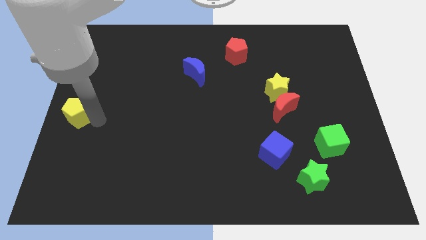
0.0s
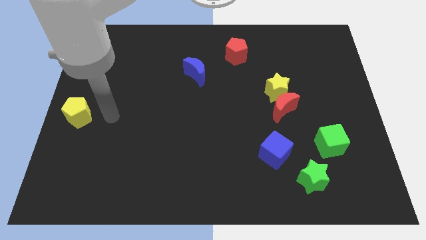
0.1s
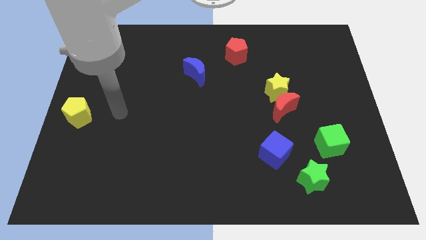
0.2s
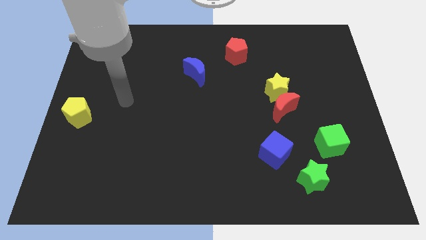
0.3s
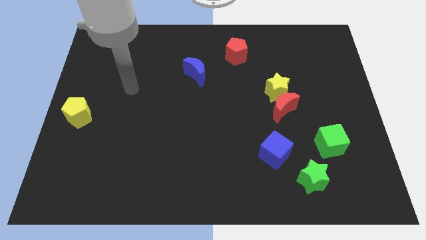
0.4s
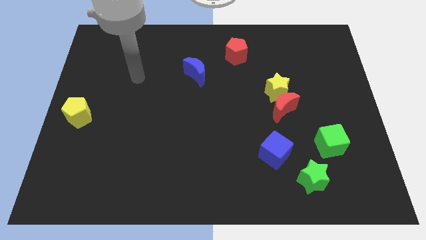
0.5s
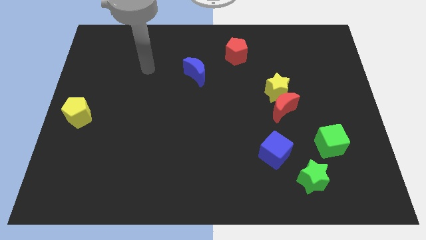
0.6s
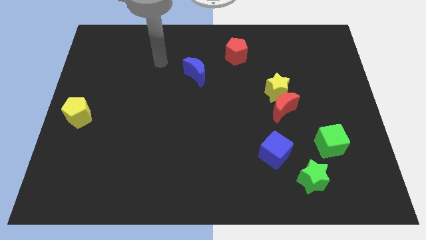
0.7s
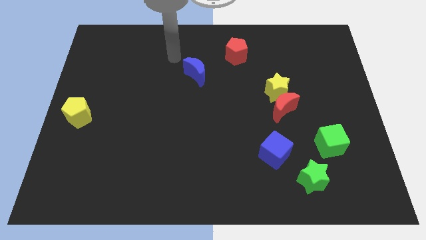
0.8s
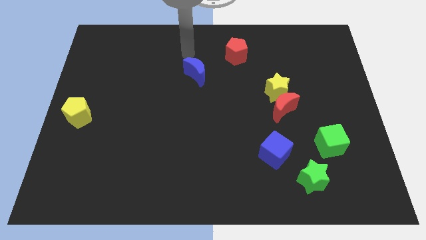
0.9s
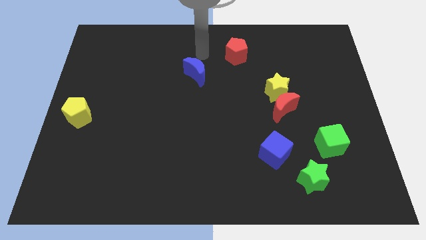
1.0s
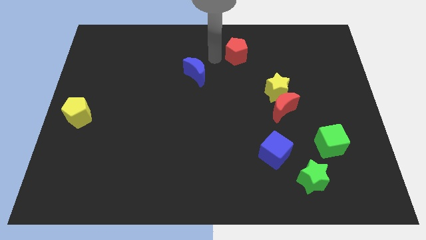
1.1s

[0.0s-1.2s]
move your arm towards the top center of the board

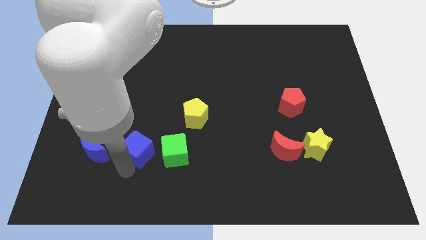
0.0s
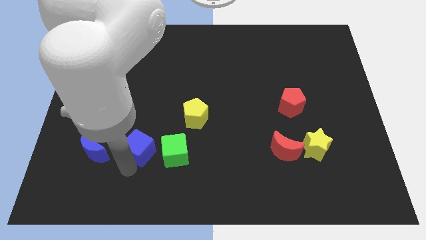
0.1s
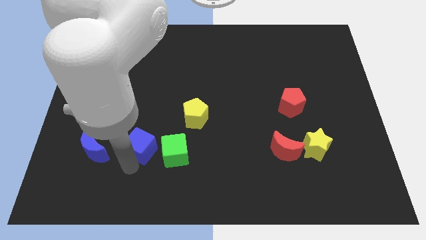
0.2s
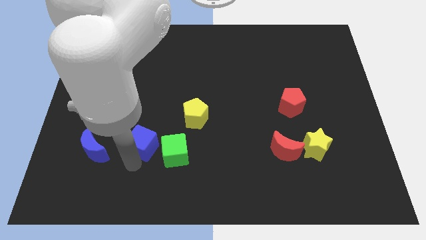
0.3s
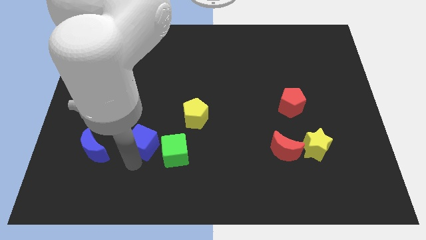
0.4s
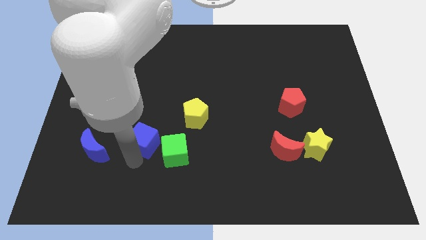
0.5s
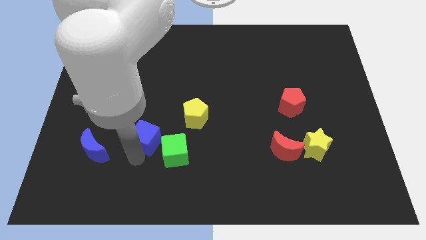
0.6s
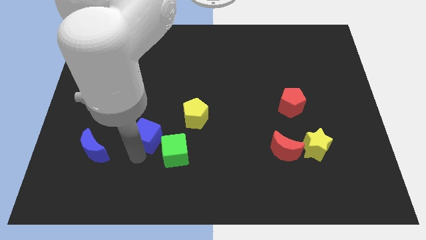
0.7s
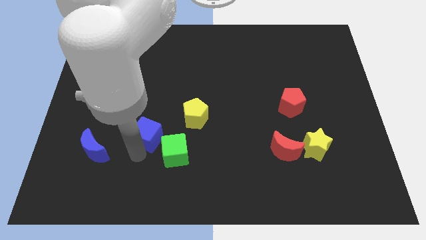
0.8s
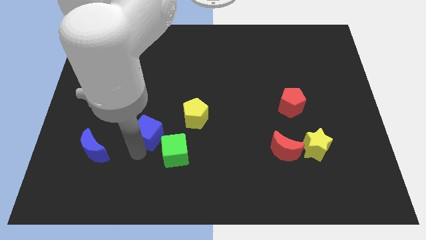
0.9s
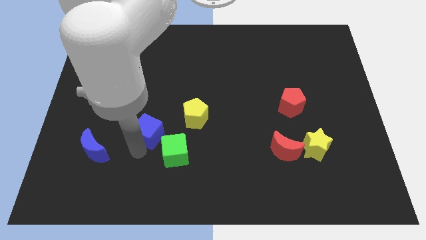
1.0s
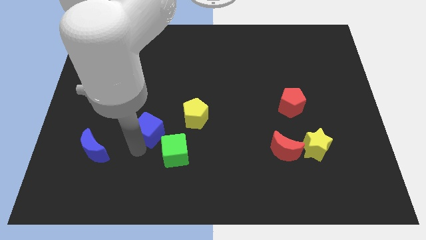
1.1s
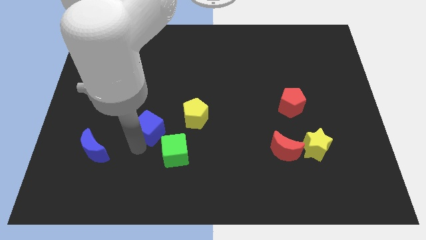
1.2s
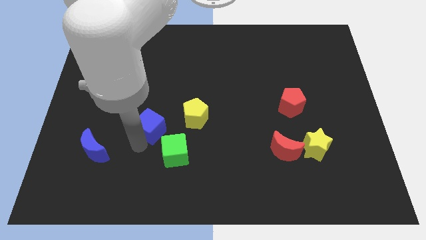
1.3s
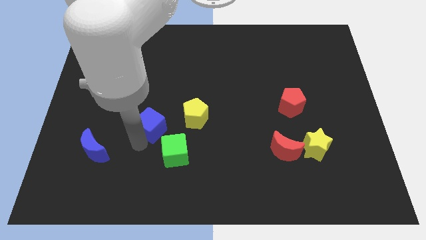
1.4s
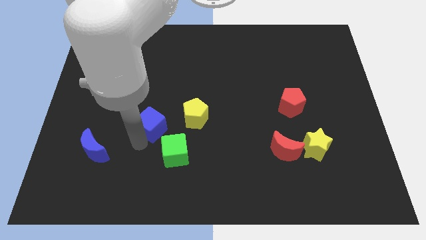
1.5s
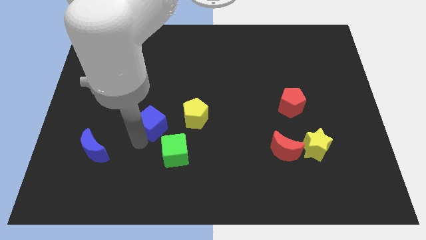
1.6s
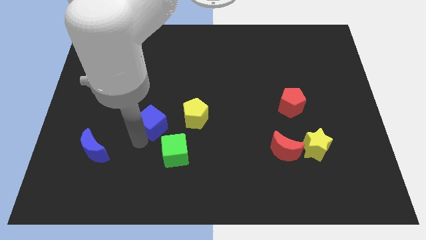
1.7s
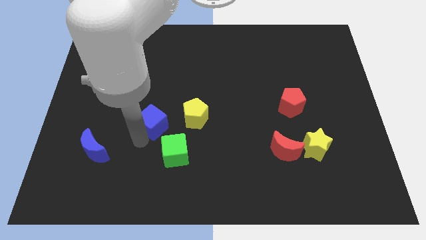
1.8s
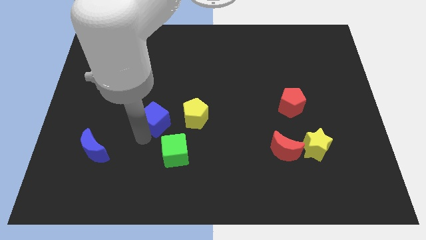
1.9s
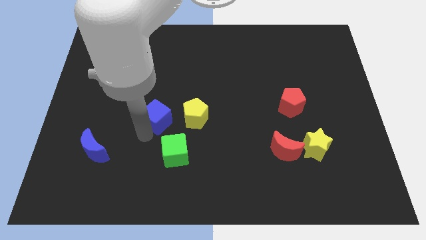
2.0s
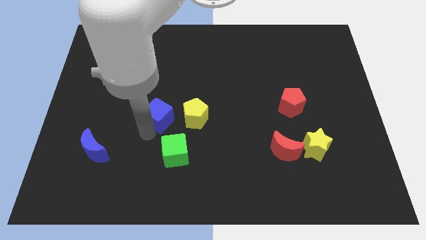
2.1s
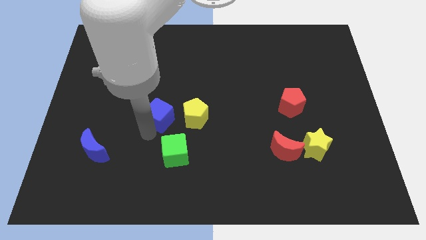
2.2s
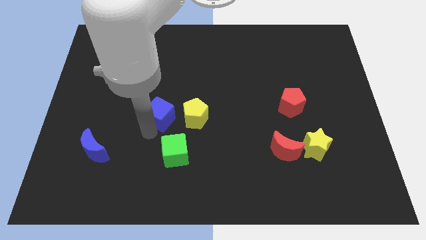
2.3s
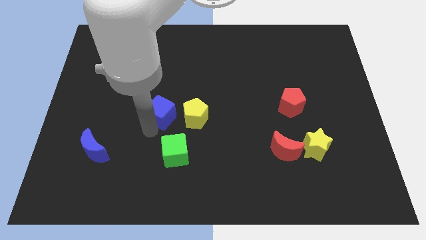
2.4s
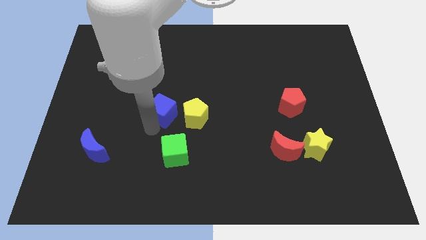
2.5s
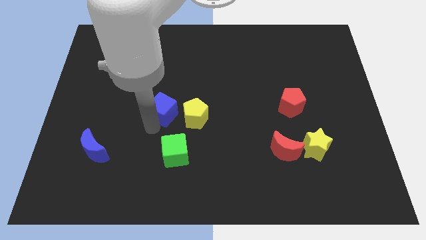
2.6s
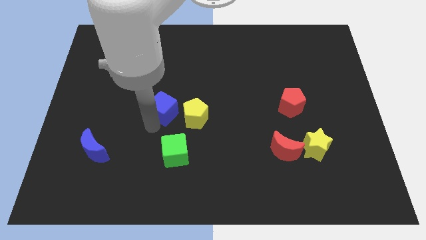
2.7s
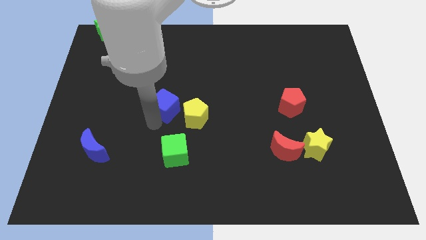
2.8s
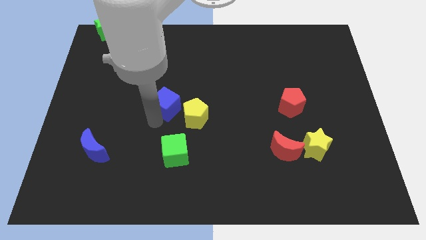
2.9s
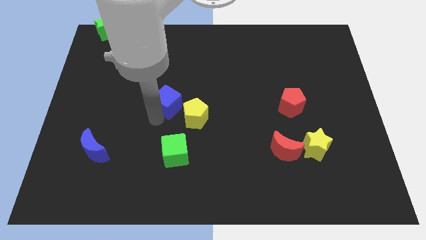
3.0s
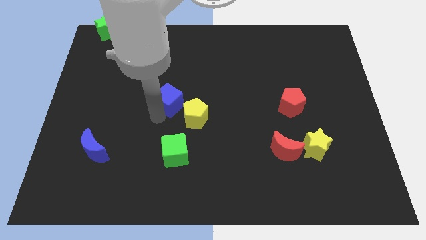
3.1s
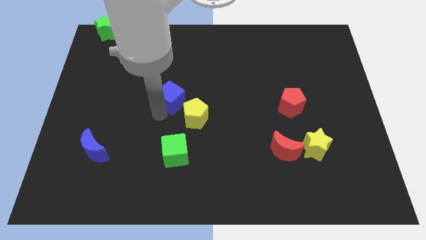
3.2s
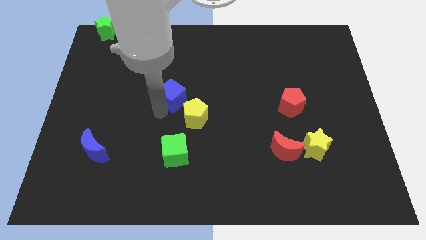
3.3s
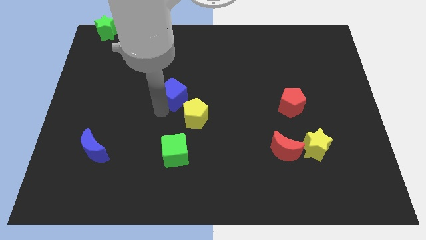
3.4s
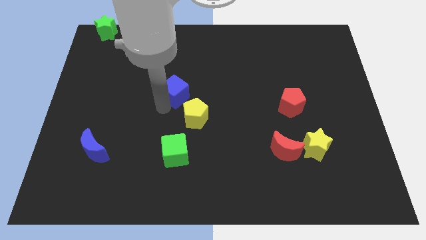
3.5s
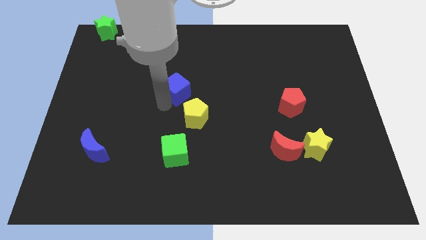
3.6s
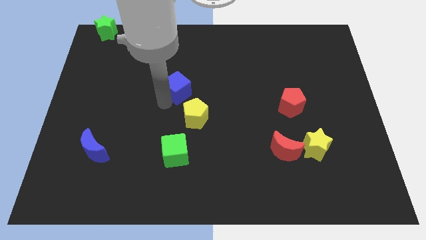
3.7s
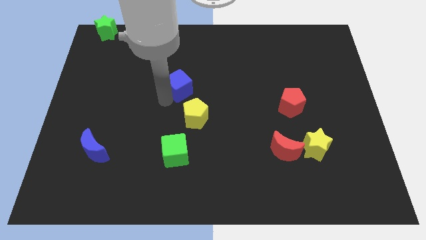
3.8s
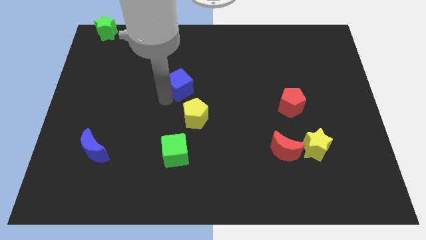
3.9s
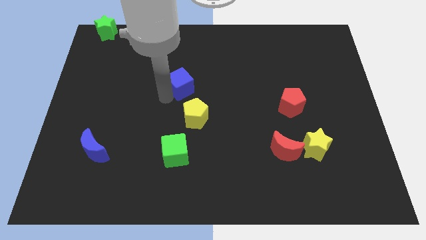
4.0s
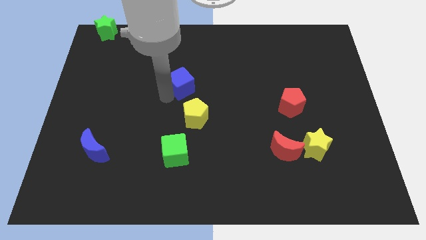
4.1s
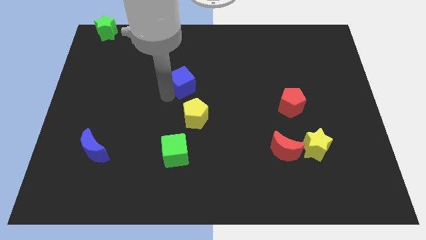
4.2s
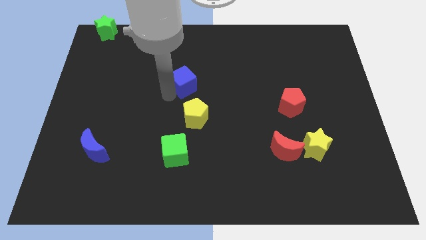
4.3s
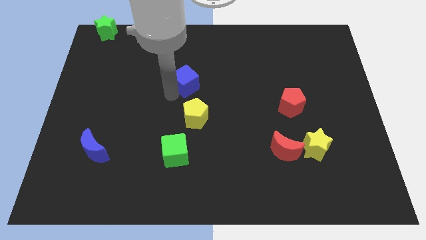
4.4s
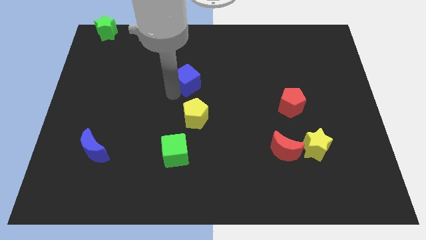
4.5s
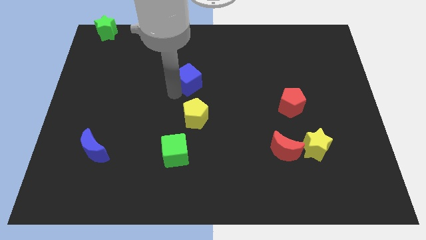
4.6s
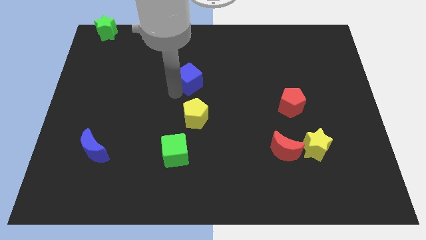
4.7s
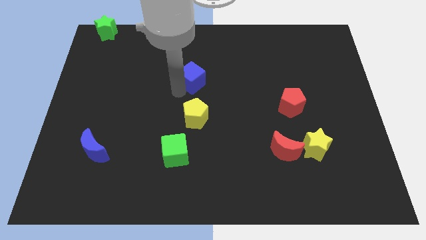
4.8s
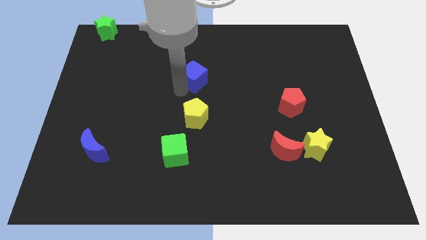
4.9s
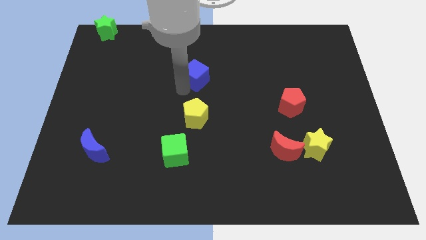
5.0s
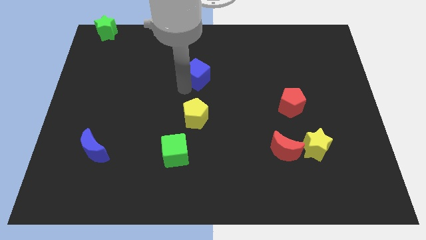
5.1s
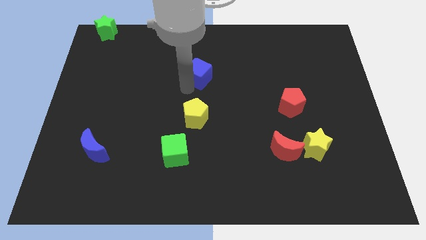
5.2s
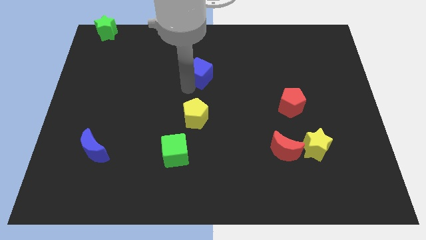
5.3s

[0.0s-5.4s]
move the blue cube above the yellow pentagon

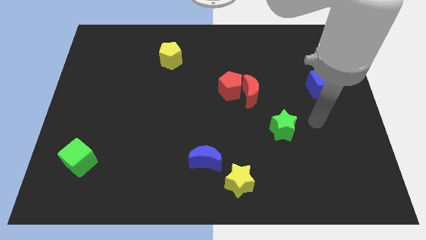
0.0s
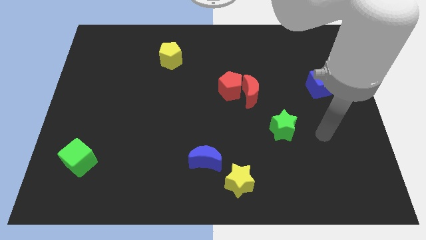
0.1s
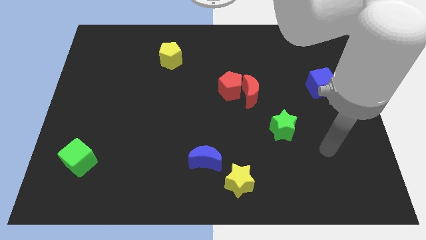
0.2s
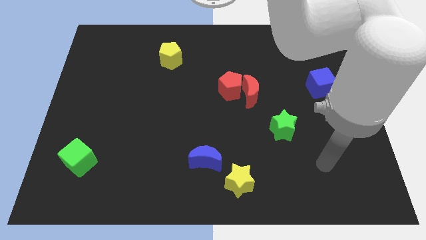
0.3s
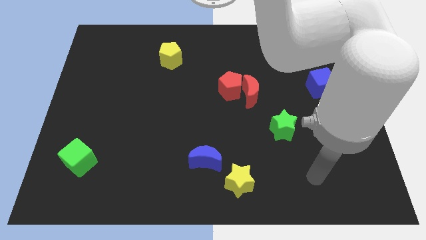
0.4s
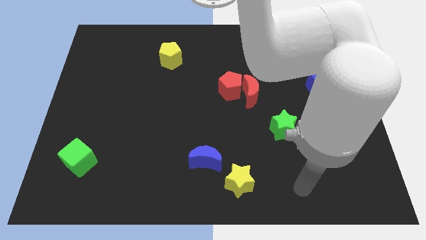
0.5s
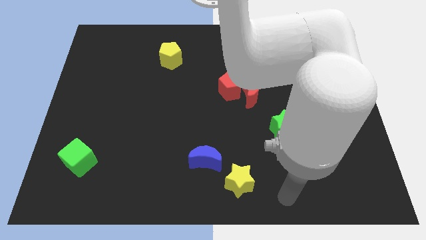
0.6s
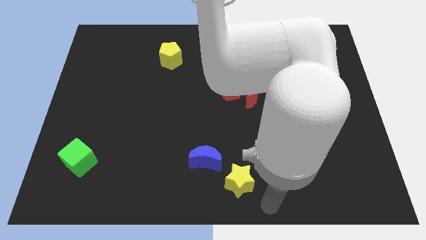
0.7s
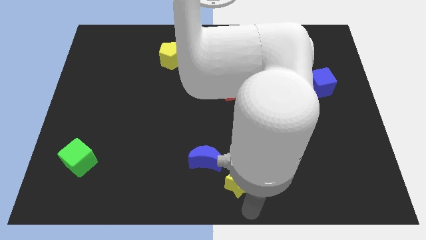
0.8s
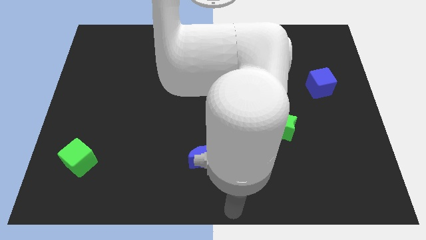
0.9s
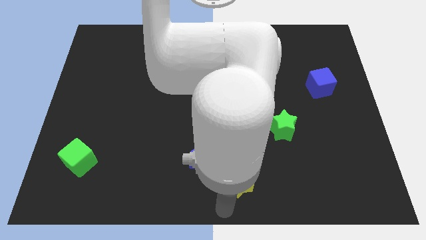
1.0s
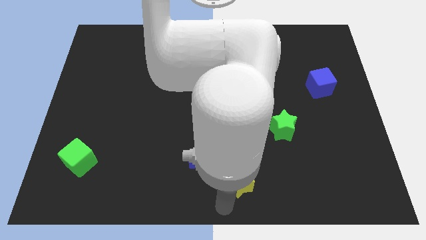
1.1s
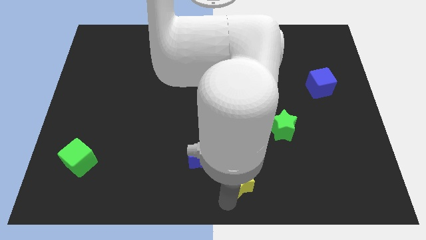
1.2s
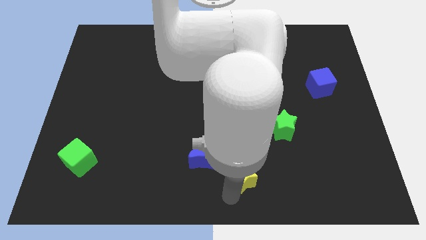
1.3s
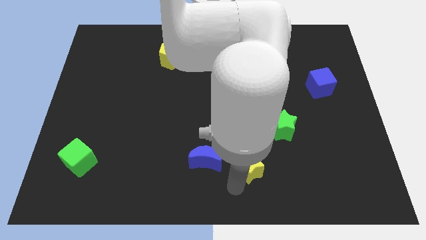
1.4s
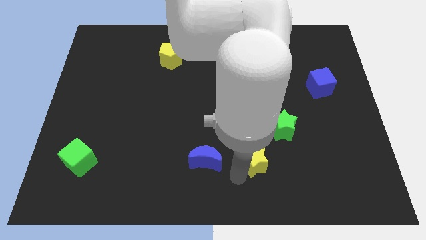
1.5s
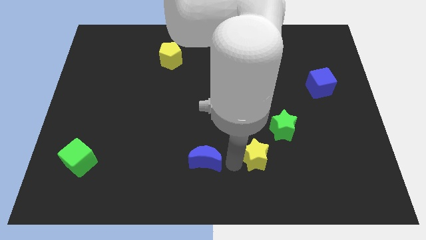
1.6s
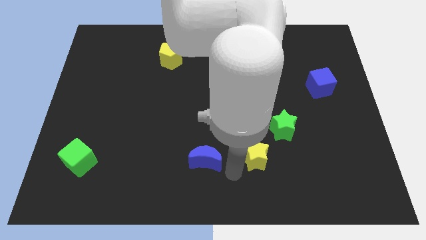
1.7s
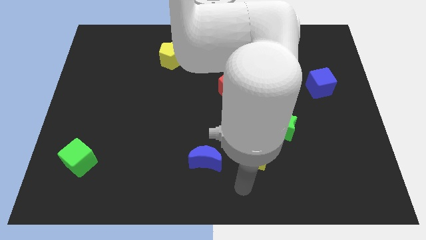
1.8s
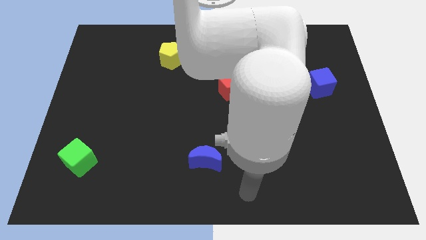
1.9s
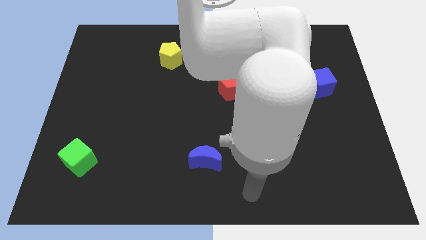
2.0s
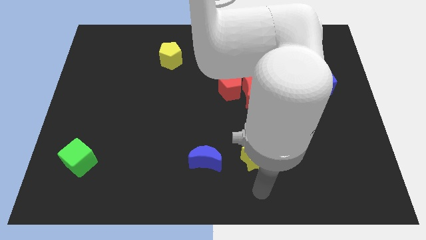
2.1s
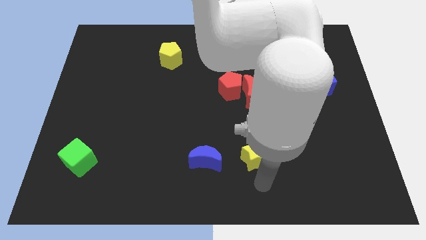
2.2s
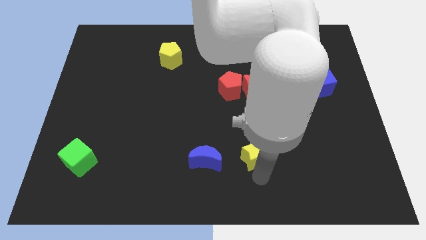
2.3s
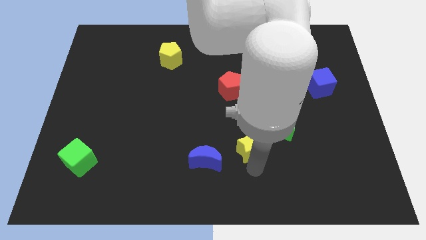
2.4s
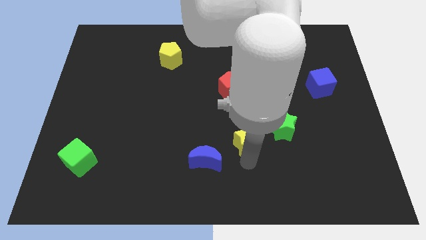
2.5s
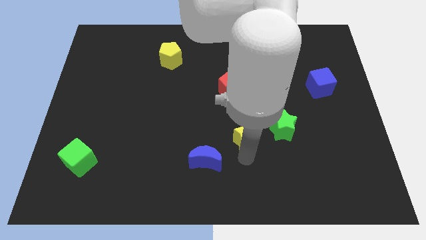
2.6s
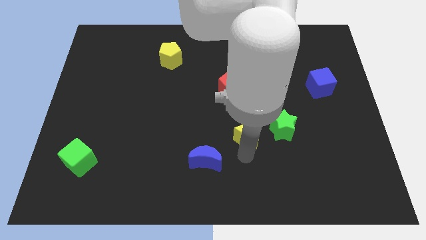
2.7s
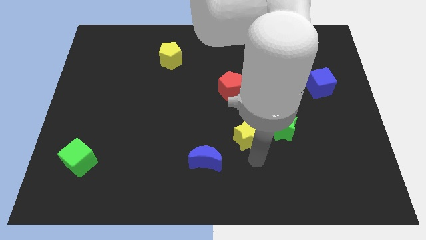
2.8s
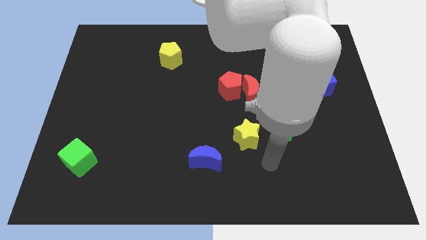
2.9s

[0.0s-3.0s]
drag the yellow star slightly upwards
